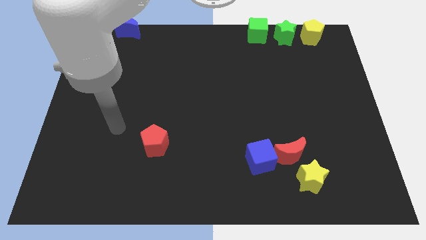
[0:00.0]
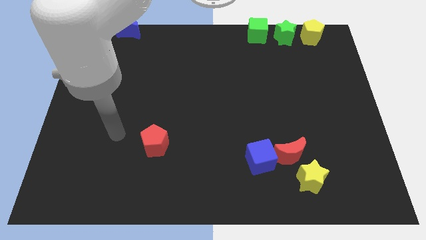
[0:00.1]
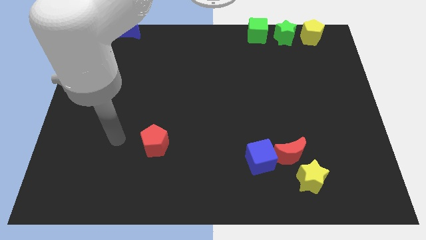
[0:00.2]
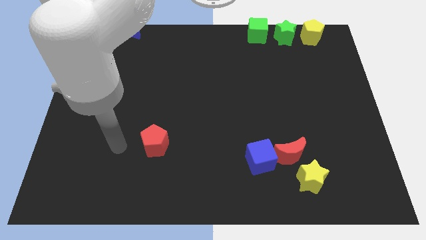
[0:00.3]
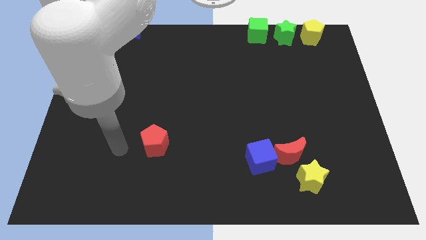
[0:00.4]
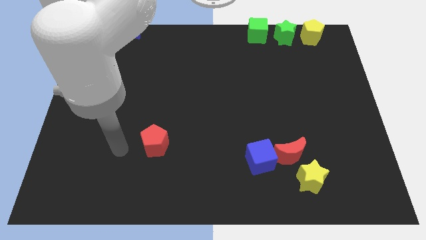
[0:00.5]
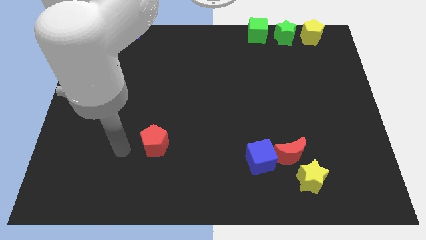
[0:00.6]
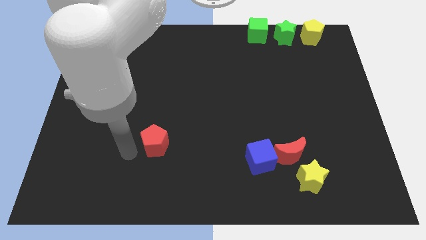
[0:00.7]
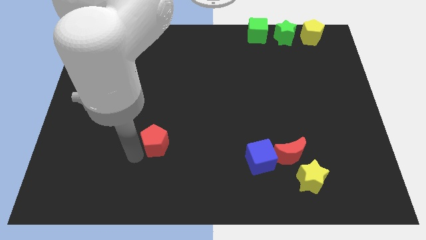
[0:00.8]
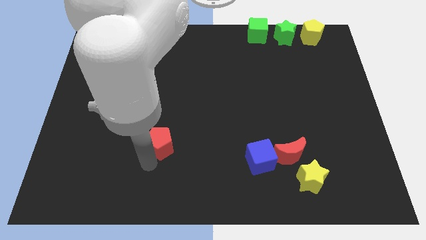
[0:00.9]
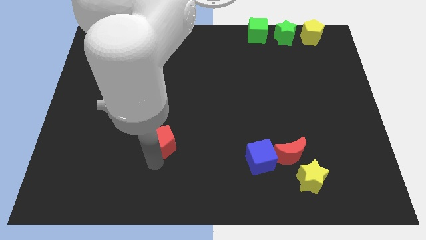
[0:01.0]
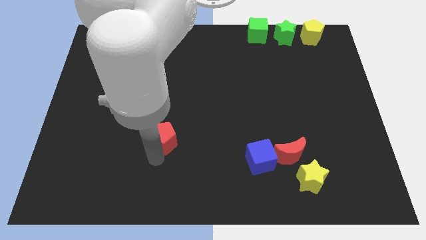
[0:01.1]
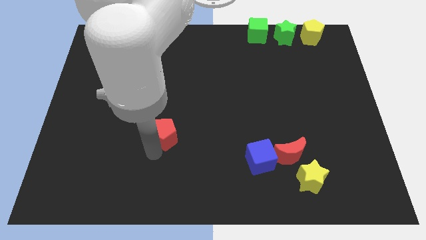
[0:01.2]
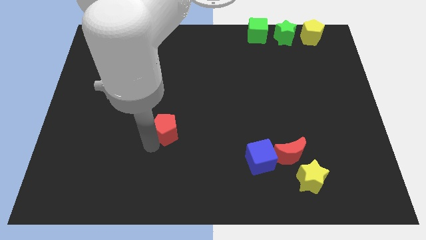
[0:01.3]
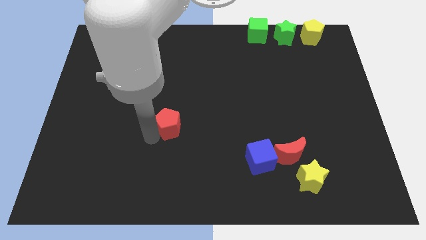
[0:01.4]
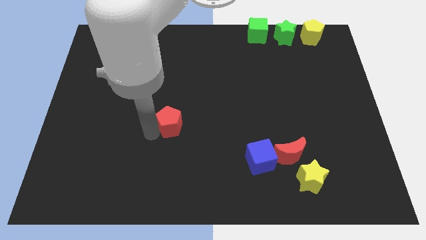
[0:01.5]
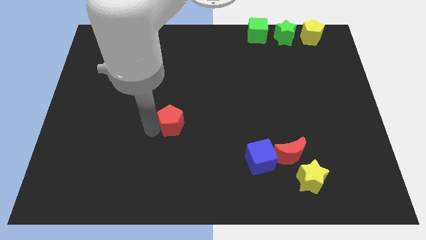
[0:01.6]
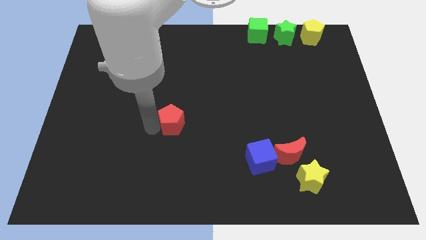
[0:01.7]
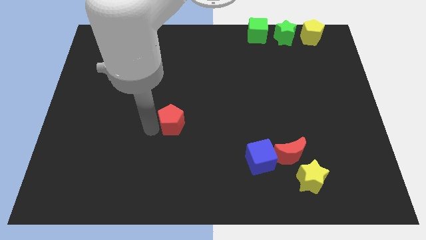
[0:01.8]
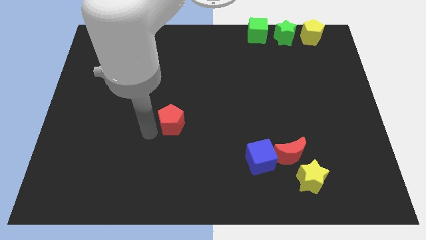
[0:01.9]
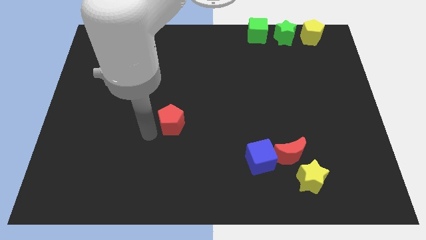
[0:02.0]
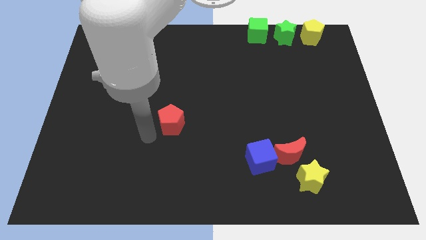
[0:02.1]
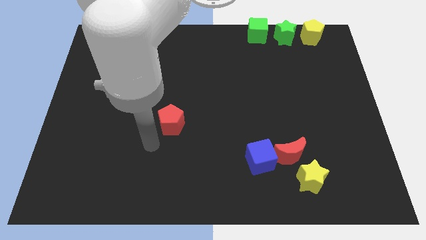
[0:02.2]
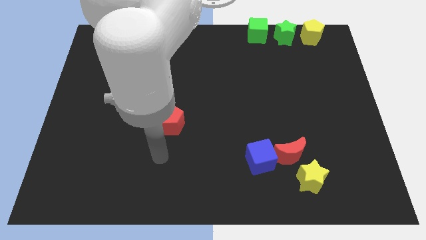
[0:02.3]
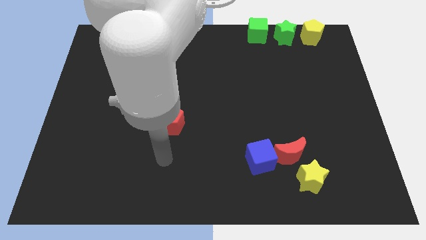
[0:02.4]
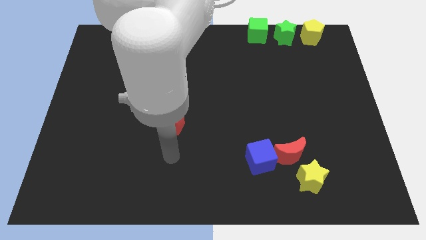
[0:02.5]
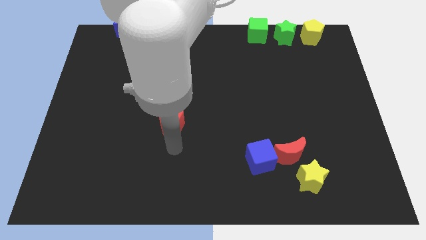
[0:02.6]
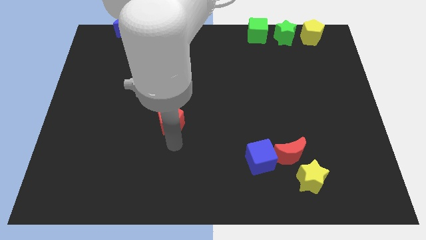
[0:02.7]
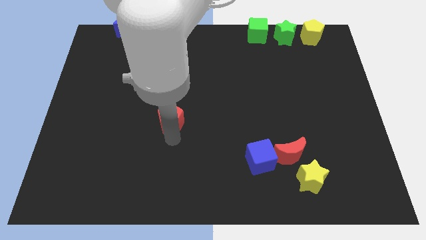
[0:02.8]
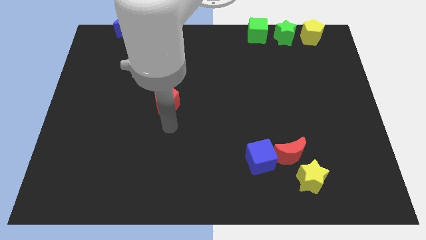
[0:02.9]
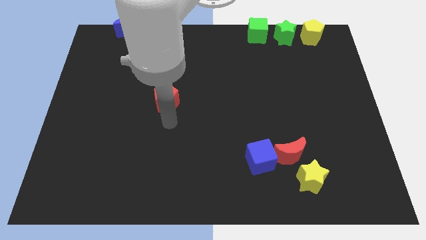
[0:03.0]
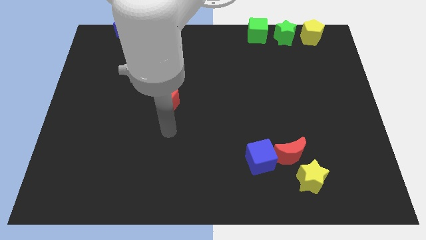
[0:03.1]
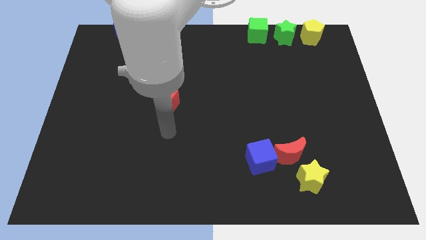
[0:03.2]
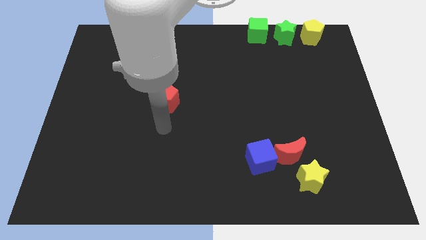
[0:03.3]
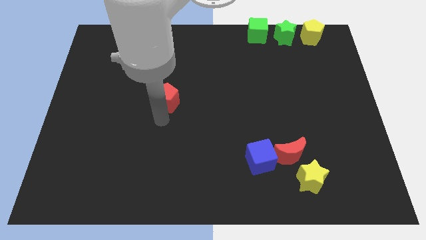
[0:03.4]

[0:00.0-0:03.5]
move the red pentagon towards the center of the board

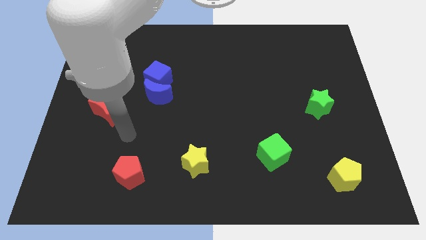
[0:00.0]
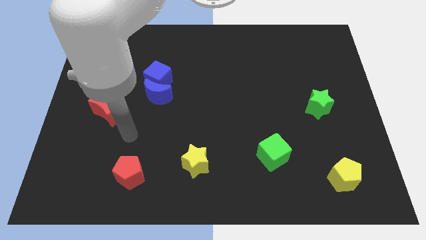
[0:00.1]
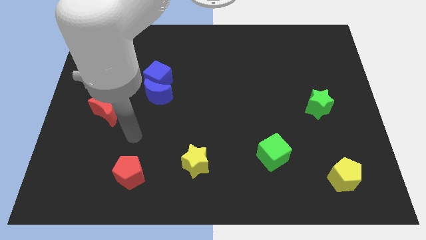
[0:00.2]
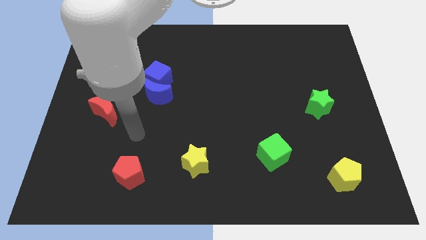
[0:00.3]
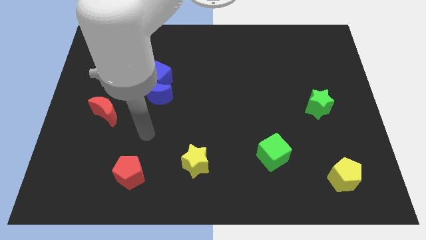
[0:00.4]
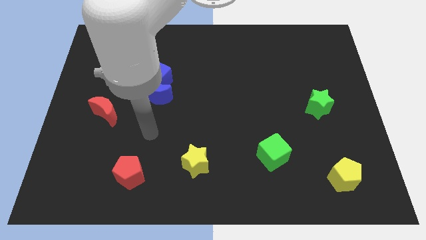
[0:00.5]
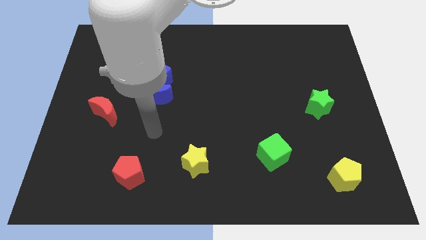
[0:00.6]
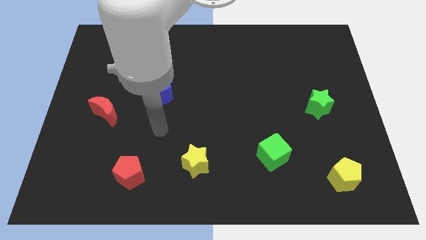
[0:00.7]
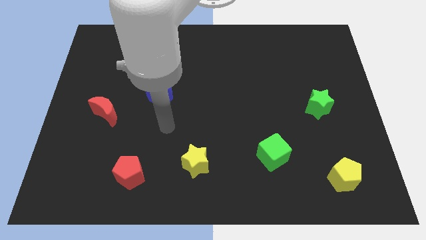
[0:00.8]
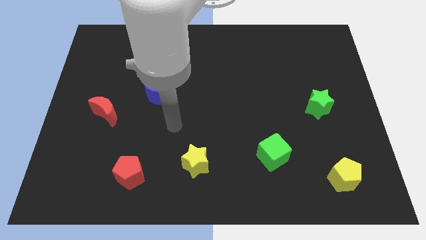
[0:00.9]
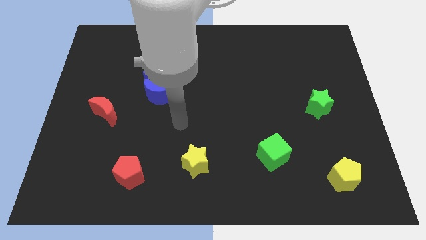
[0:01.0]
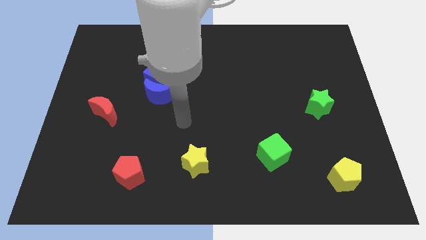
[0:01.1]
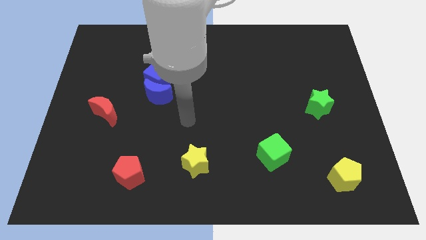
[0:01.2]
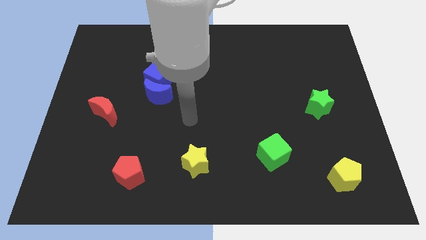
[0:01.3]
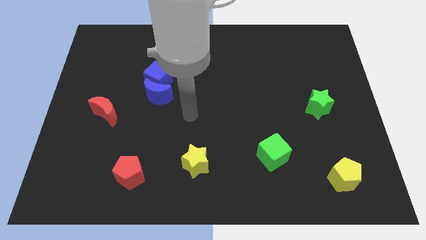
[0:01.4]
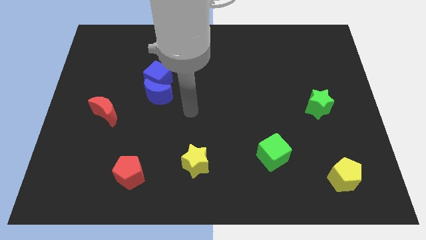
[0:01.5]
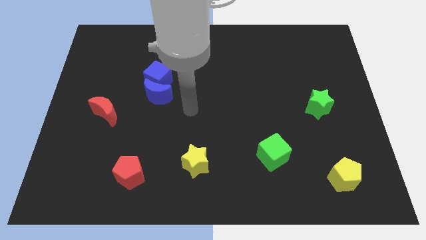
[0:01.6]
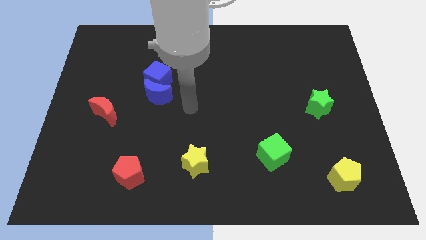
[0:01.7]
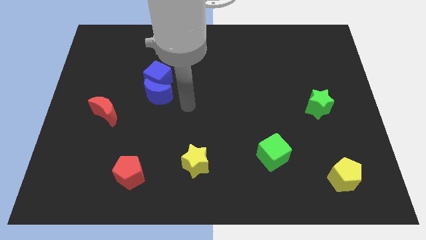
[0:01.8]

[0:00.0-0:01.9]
move your arm to the center of the board

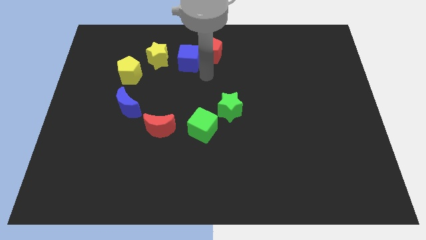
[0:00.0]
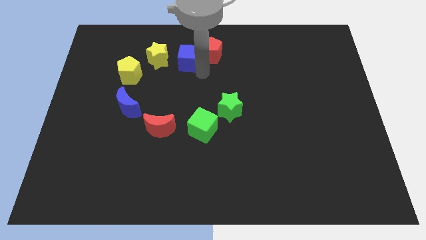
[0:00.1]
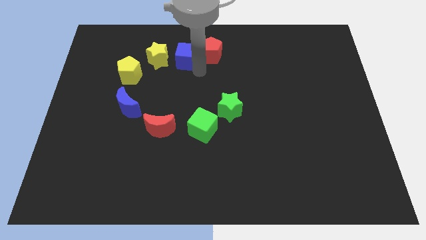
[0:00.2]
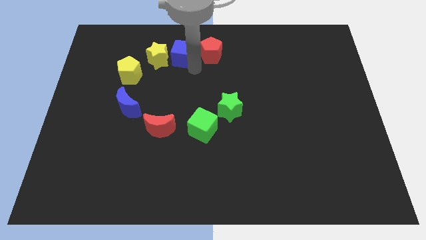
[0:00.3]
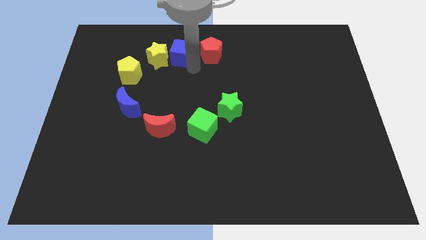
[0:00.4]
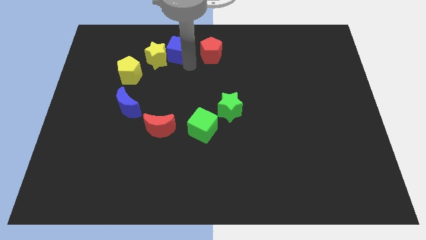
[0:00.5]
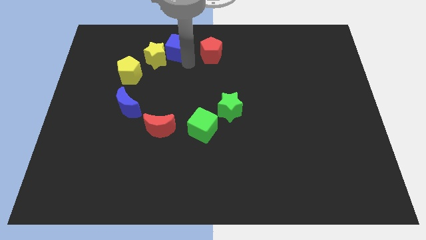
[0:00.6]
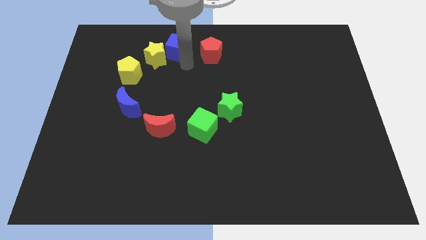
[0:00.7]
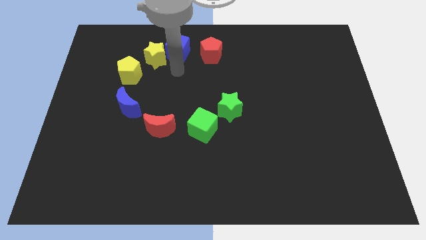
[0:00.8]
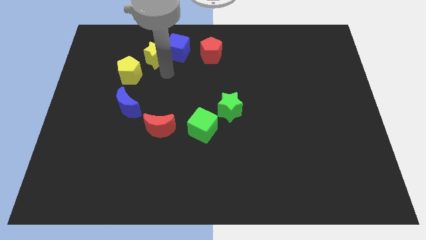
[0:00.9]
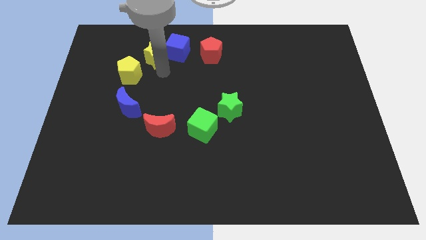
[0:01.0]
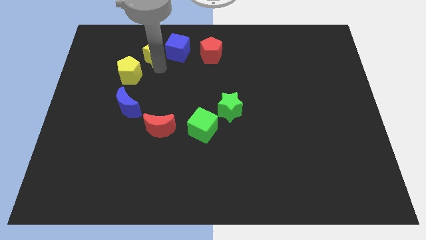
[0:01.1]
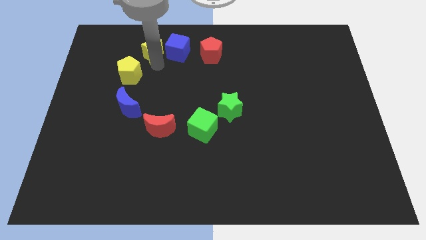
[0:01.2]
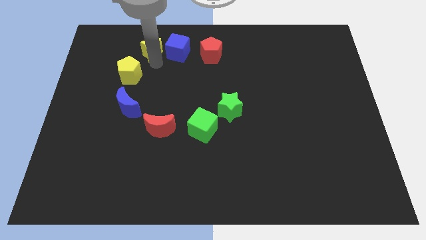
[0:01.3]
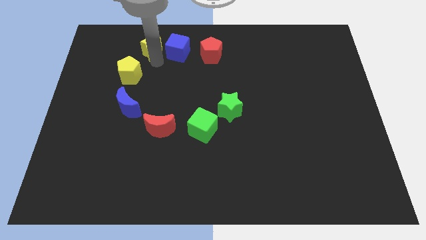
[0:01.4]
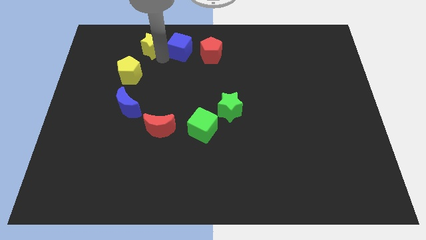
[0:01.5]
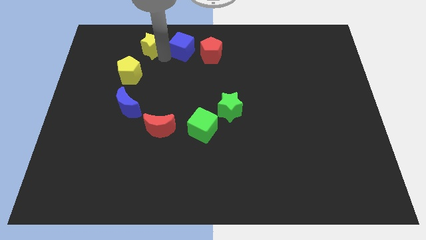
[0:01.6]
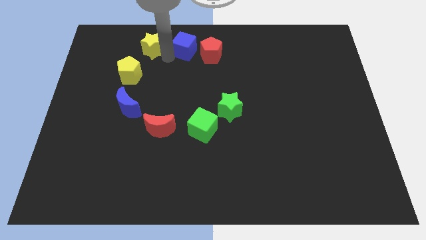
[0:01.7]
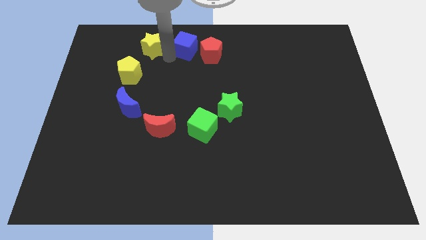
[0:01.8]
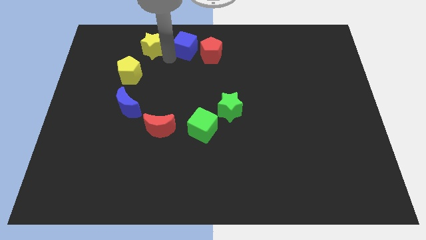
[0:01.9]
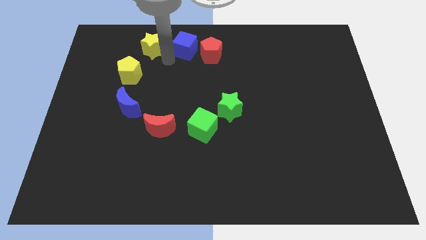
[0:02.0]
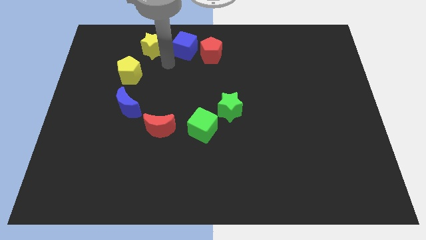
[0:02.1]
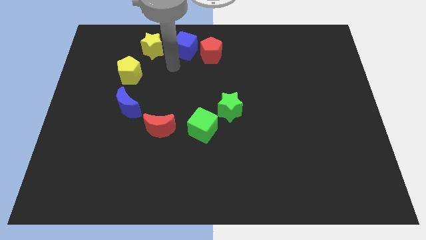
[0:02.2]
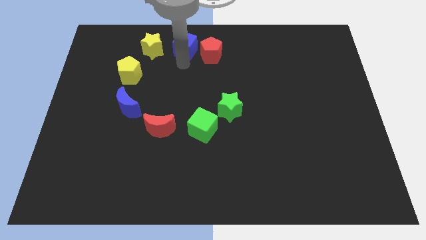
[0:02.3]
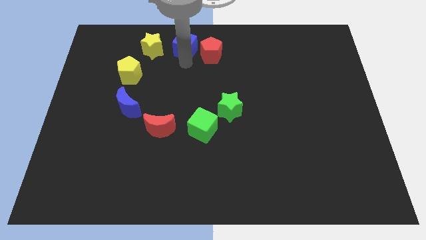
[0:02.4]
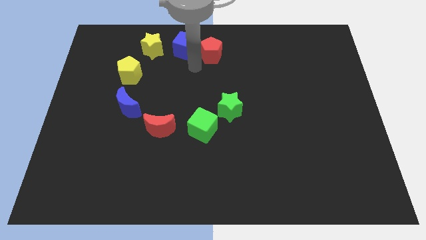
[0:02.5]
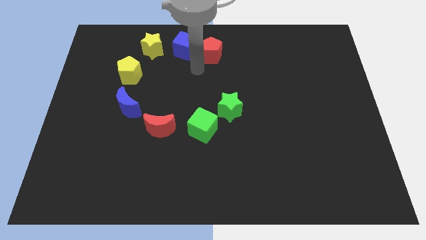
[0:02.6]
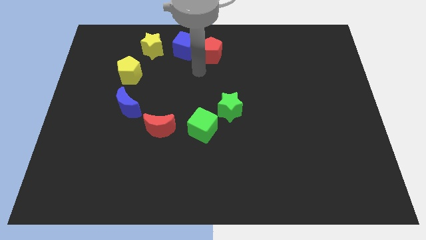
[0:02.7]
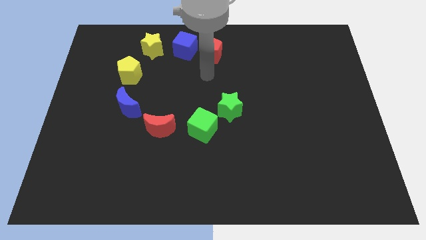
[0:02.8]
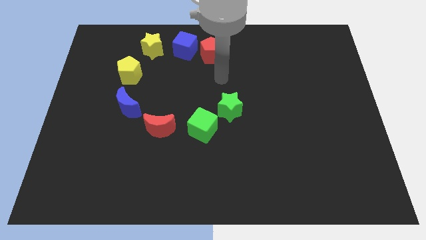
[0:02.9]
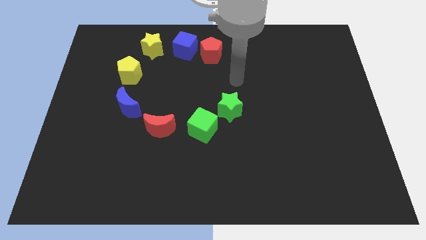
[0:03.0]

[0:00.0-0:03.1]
slightly move the yellow star upwards

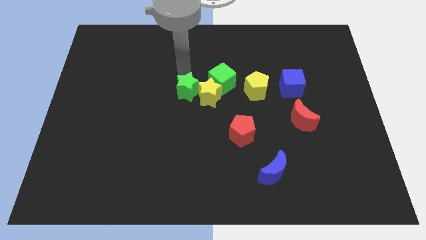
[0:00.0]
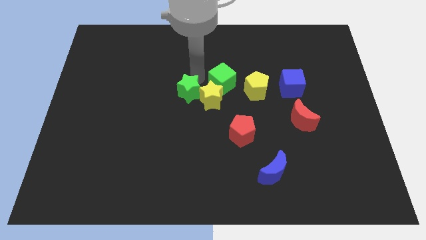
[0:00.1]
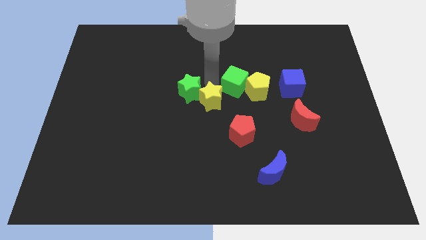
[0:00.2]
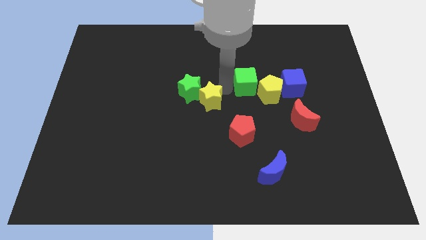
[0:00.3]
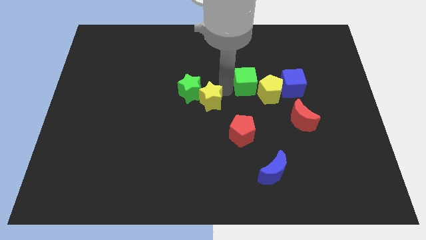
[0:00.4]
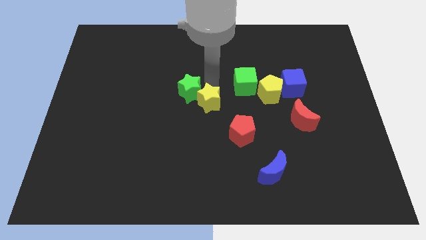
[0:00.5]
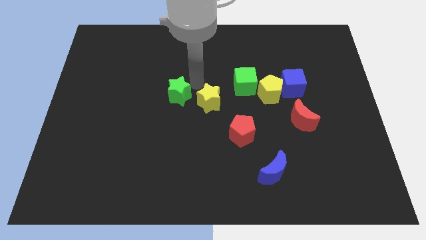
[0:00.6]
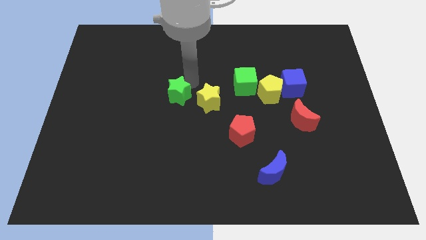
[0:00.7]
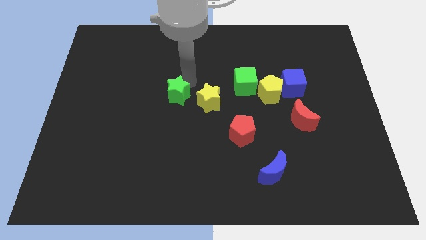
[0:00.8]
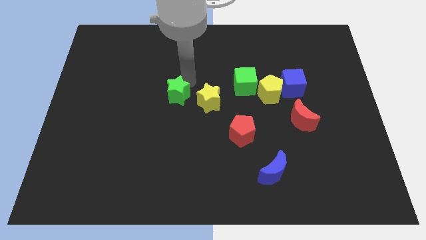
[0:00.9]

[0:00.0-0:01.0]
separate yellow star and green cube
